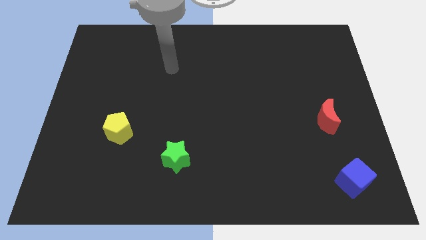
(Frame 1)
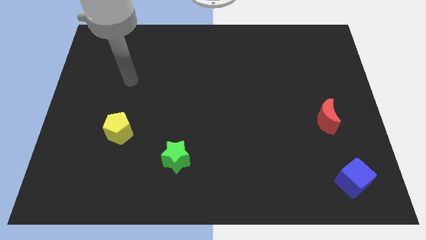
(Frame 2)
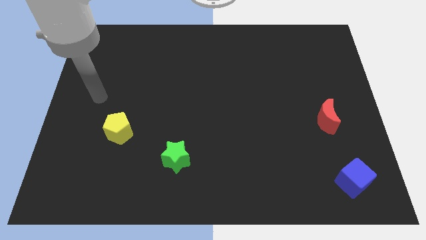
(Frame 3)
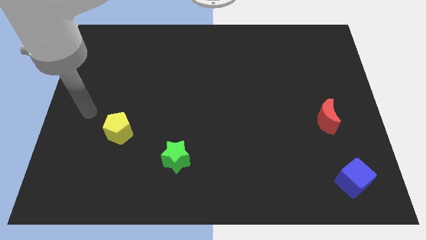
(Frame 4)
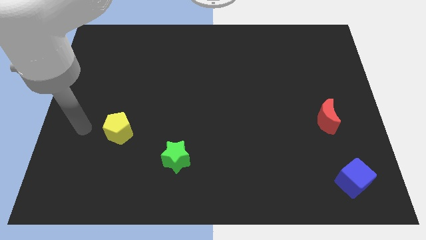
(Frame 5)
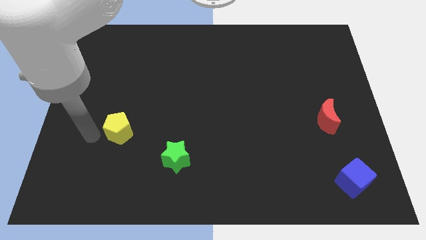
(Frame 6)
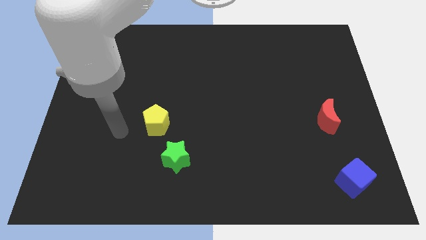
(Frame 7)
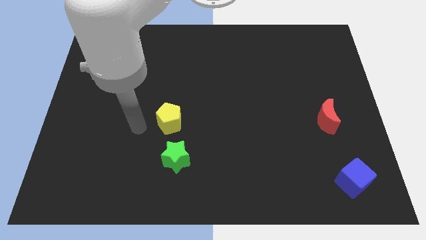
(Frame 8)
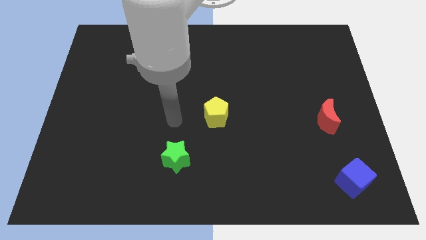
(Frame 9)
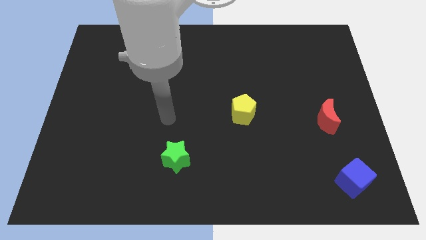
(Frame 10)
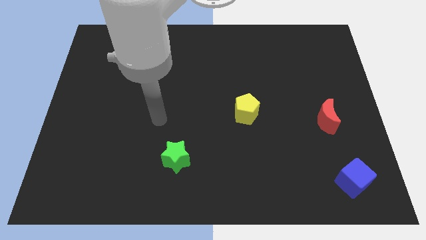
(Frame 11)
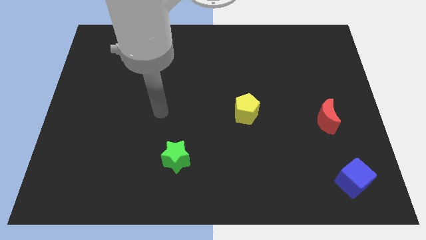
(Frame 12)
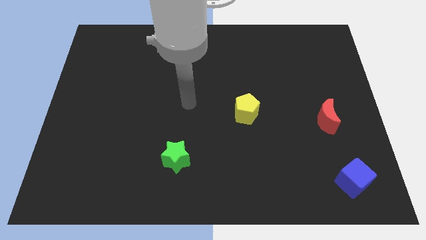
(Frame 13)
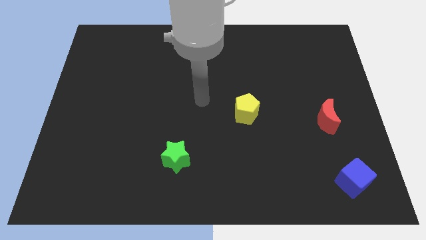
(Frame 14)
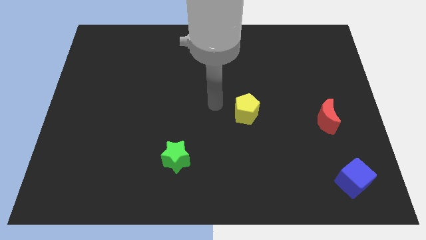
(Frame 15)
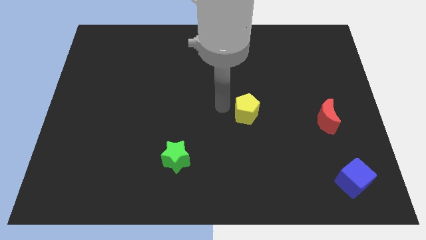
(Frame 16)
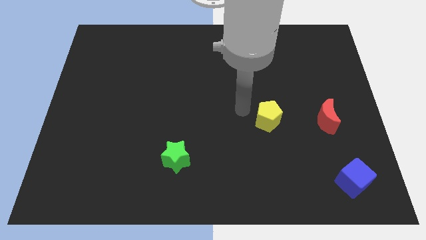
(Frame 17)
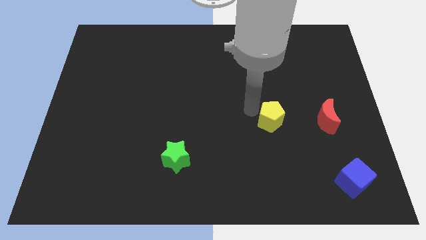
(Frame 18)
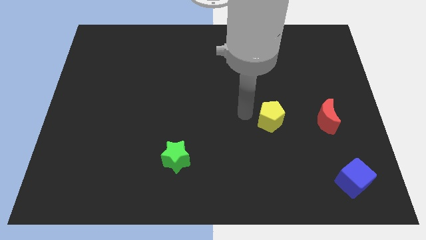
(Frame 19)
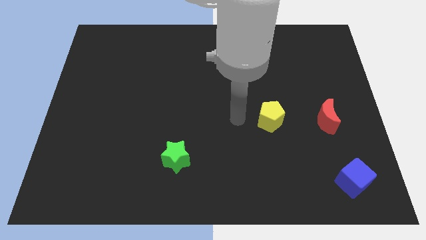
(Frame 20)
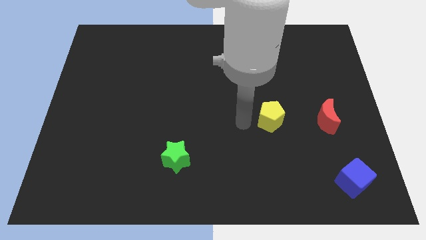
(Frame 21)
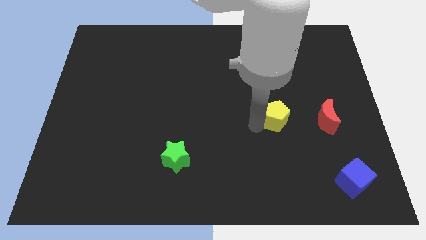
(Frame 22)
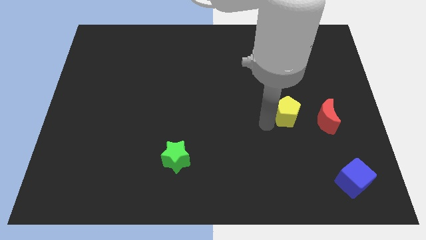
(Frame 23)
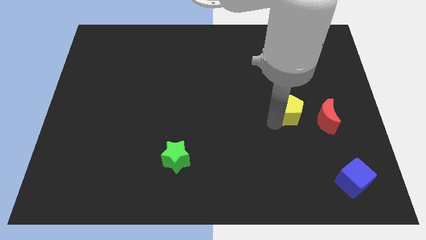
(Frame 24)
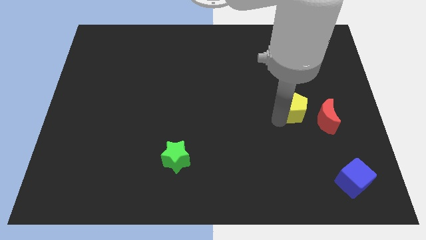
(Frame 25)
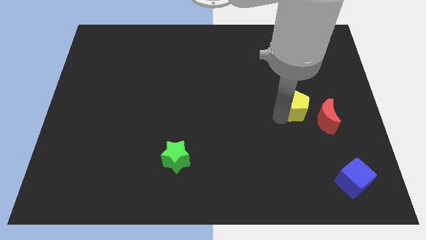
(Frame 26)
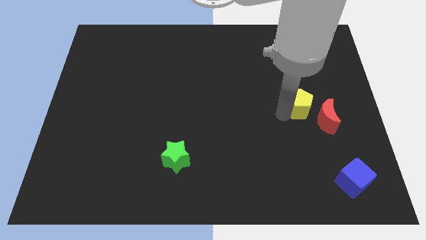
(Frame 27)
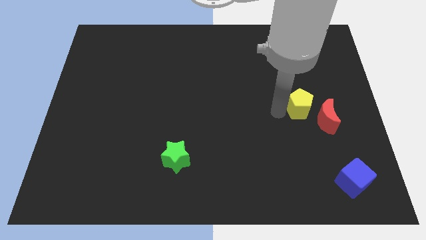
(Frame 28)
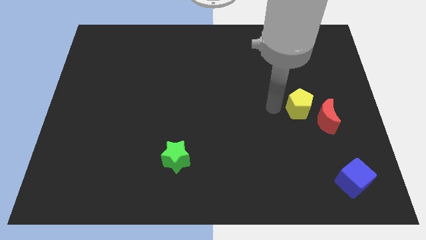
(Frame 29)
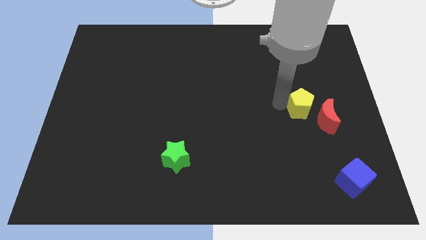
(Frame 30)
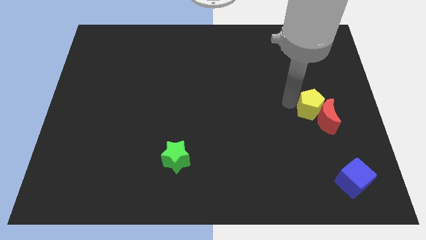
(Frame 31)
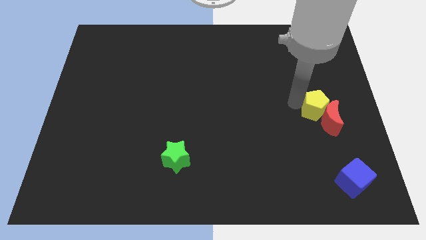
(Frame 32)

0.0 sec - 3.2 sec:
push the pentagon next to the moon

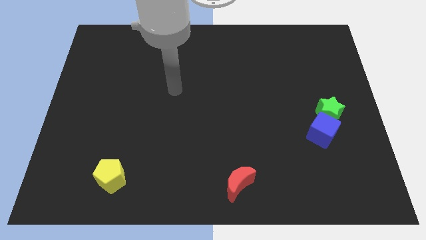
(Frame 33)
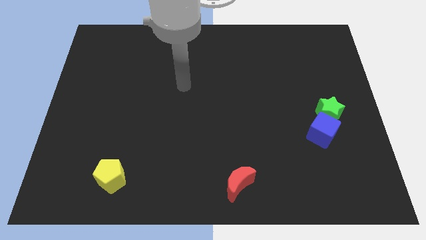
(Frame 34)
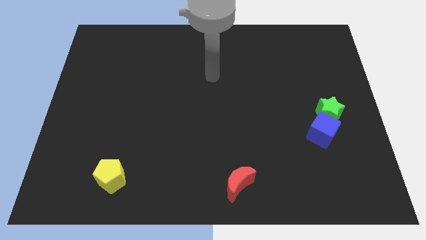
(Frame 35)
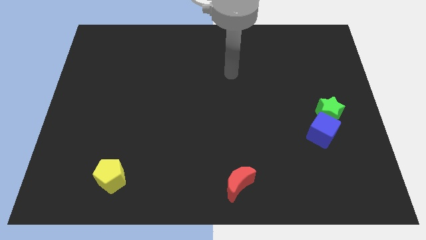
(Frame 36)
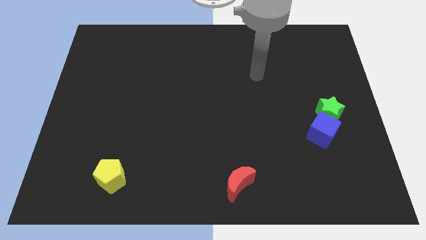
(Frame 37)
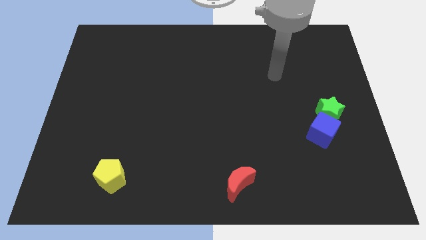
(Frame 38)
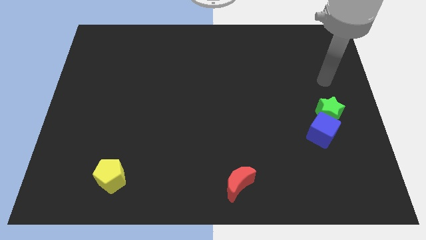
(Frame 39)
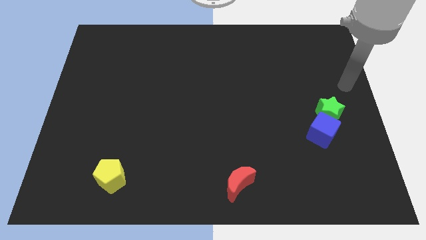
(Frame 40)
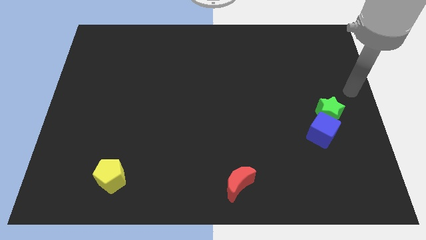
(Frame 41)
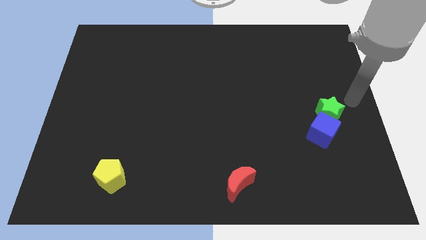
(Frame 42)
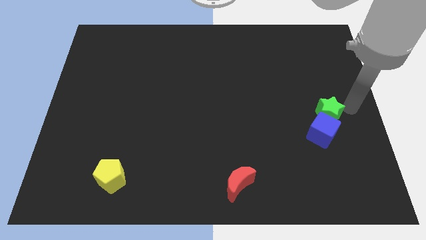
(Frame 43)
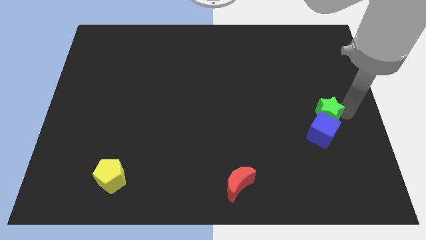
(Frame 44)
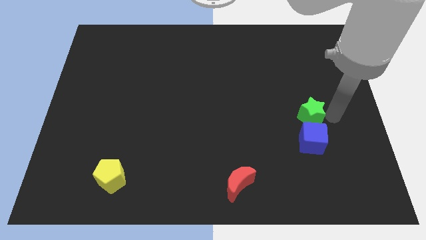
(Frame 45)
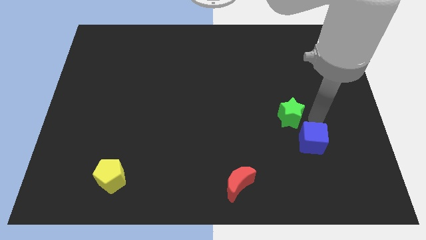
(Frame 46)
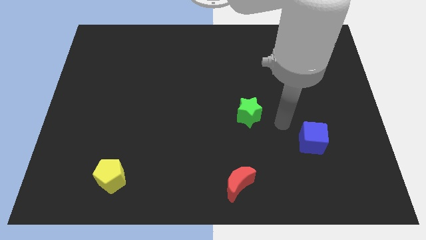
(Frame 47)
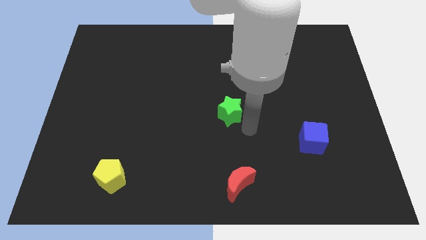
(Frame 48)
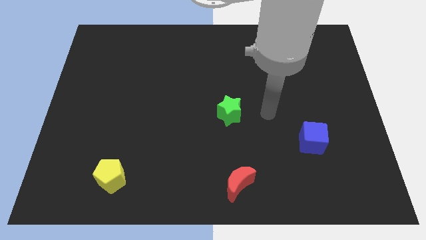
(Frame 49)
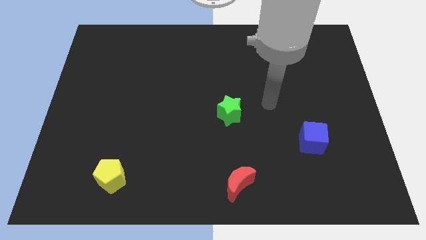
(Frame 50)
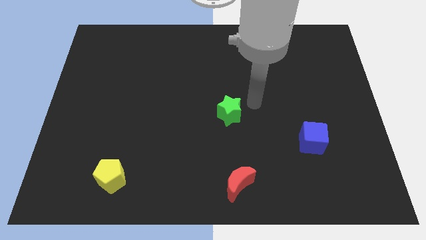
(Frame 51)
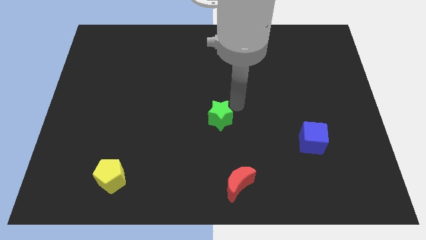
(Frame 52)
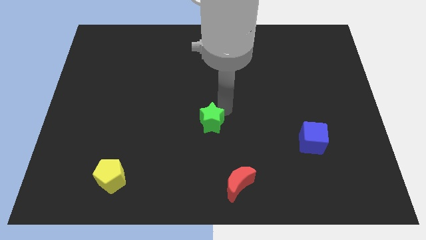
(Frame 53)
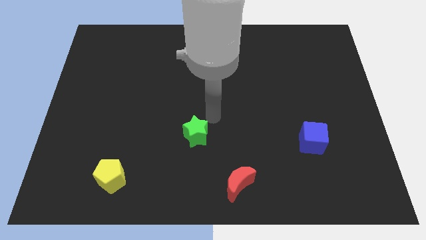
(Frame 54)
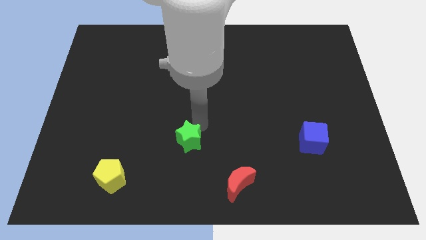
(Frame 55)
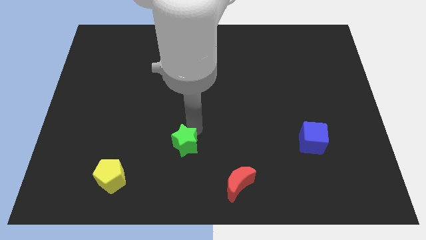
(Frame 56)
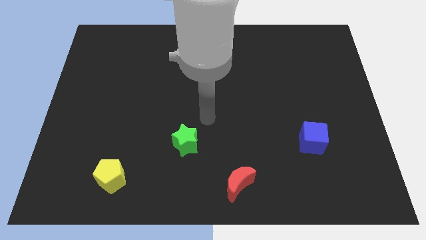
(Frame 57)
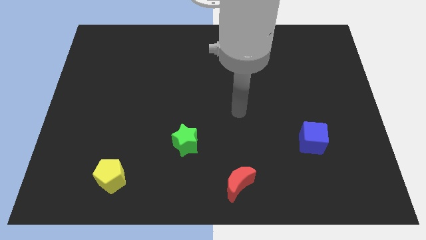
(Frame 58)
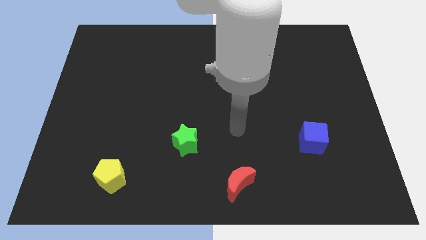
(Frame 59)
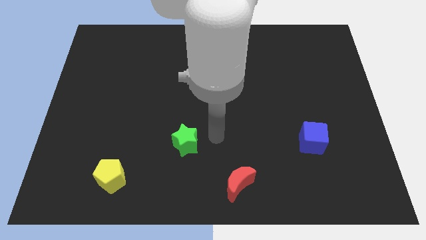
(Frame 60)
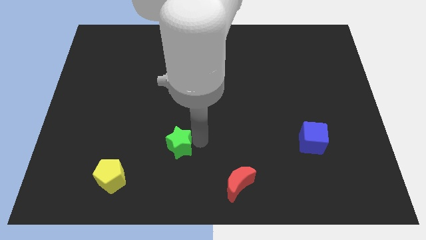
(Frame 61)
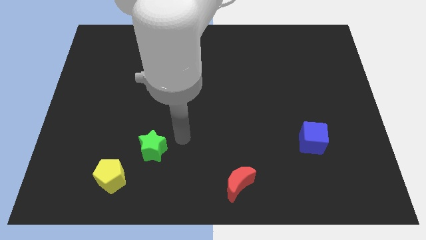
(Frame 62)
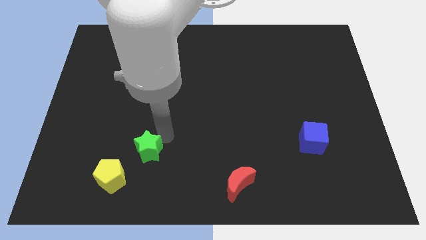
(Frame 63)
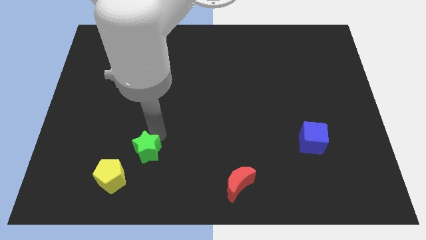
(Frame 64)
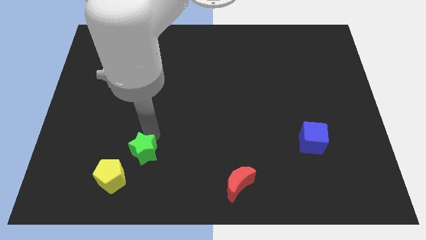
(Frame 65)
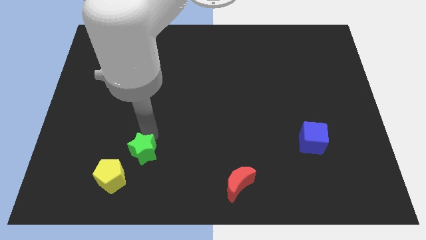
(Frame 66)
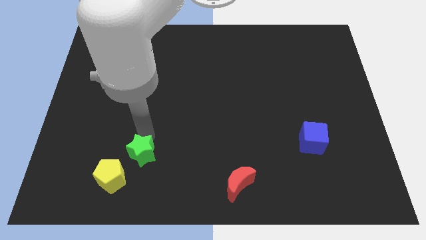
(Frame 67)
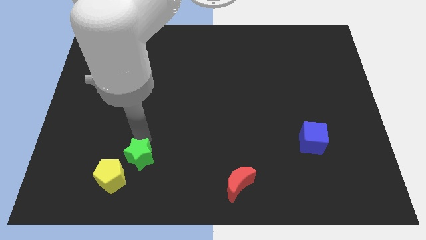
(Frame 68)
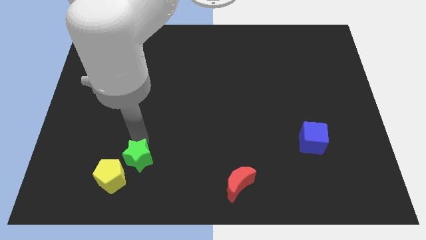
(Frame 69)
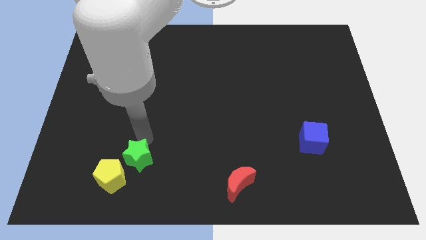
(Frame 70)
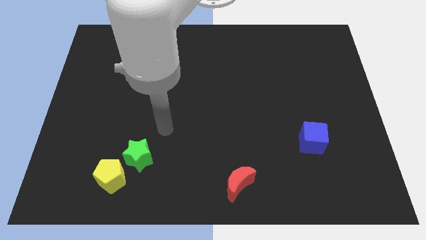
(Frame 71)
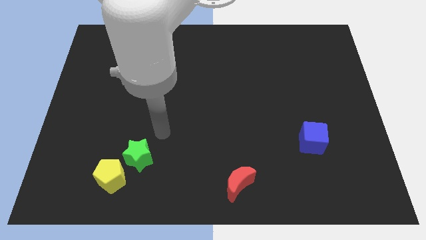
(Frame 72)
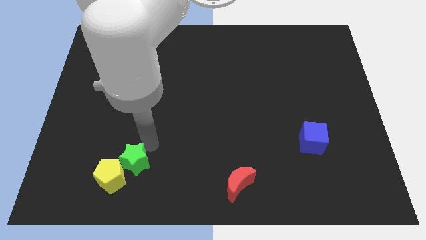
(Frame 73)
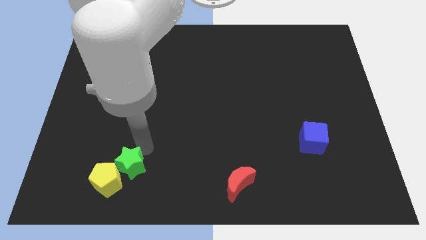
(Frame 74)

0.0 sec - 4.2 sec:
slide the star next to the yellow block

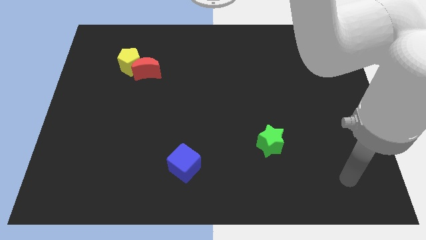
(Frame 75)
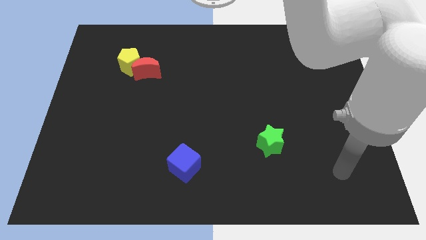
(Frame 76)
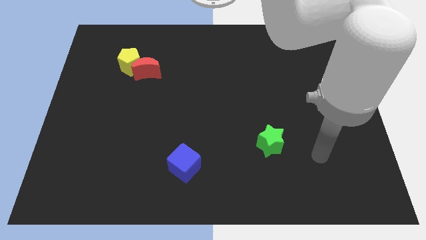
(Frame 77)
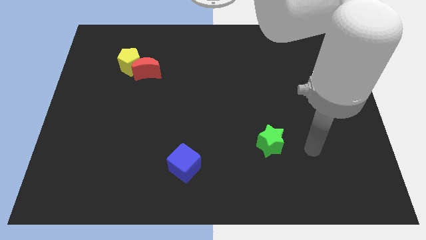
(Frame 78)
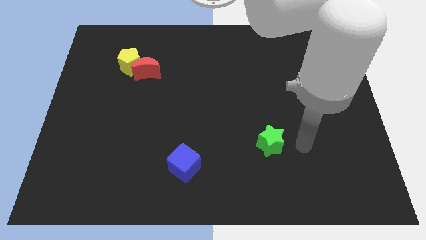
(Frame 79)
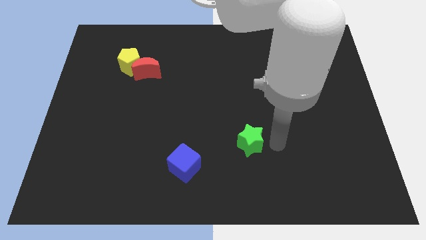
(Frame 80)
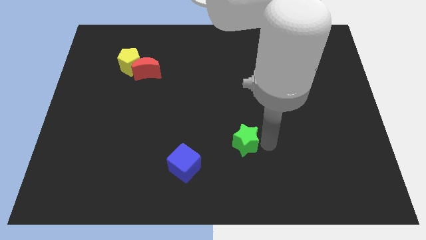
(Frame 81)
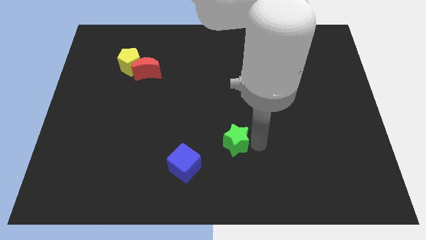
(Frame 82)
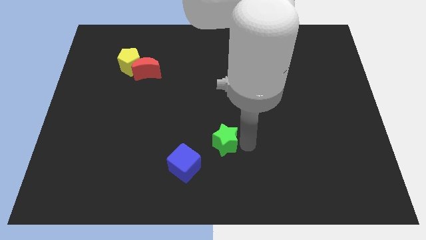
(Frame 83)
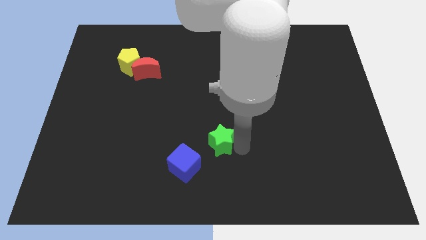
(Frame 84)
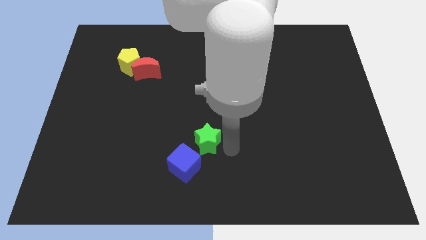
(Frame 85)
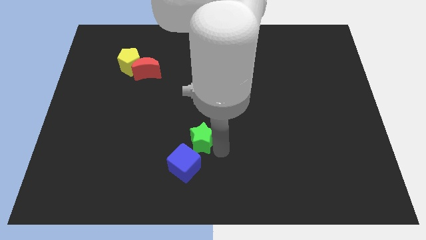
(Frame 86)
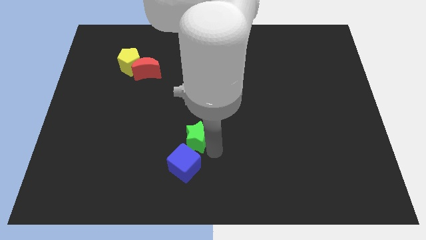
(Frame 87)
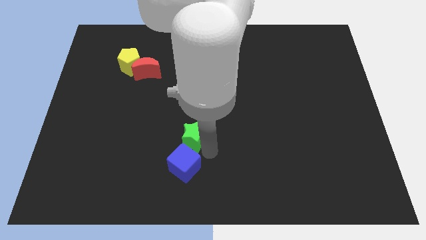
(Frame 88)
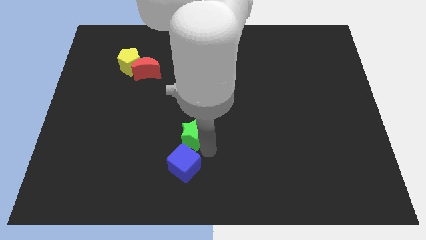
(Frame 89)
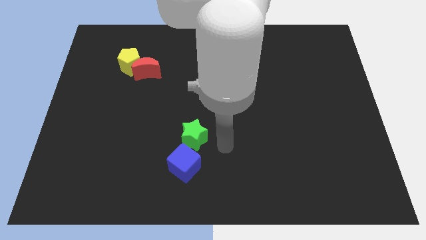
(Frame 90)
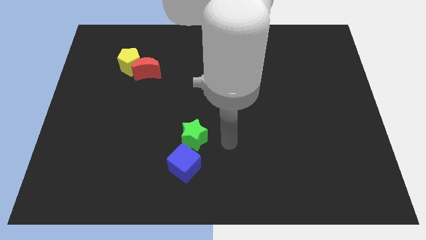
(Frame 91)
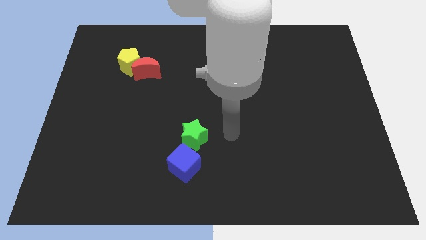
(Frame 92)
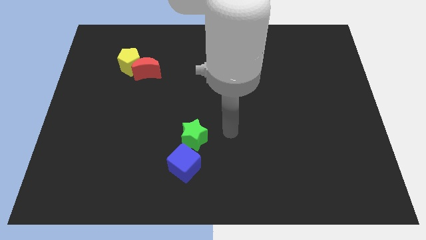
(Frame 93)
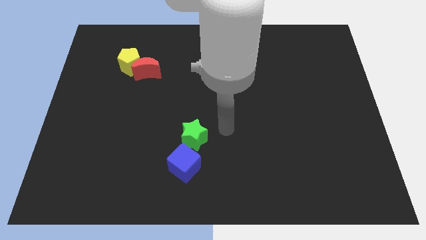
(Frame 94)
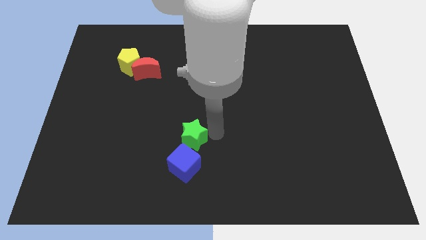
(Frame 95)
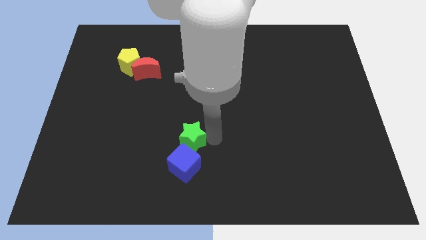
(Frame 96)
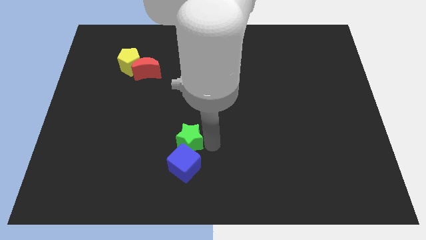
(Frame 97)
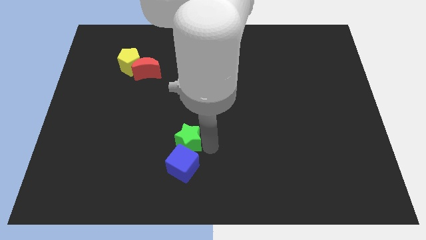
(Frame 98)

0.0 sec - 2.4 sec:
put the green star close to the cube
